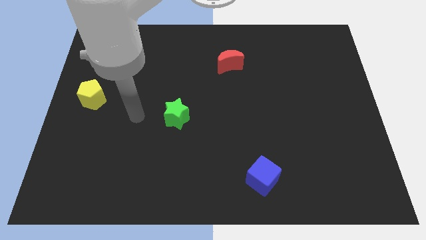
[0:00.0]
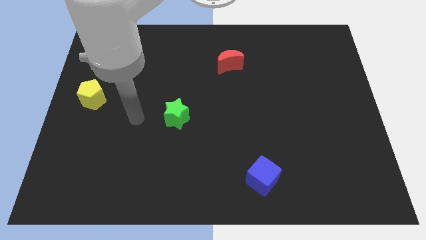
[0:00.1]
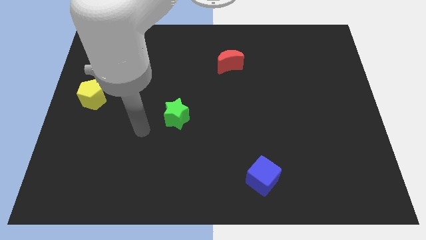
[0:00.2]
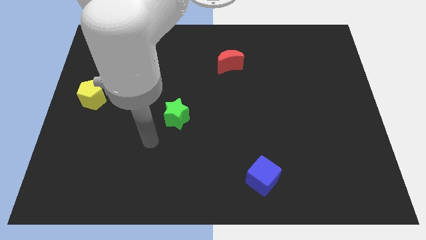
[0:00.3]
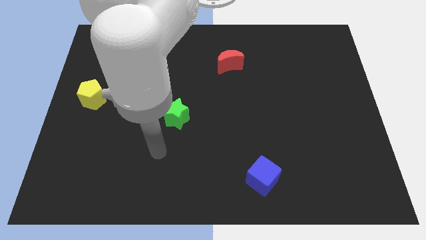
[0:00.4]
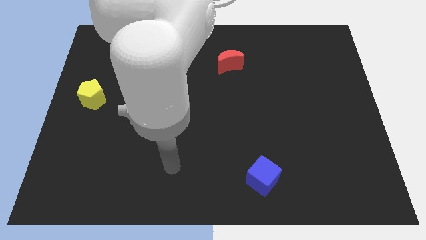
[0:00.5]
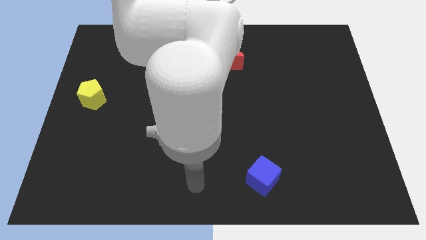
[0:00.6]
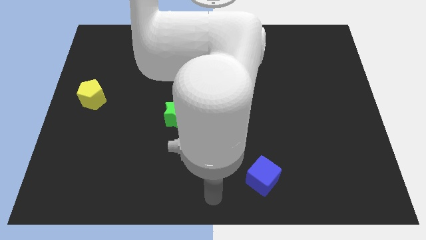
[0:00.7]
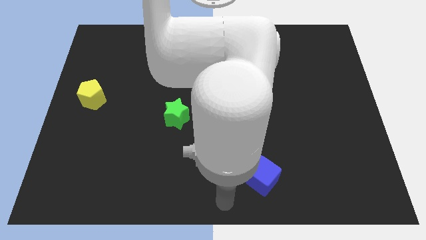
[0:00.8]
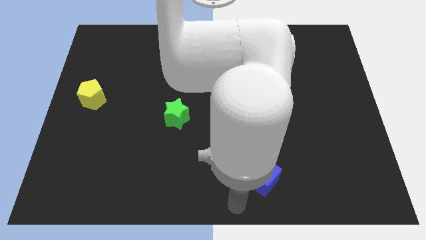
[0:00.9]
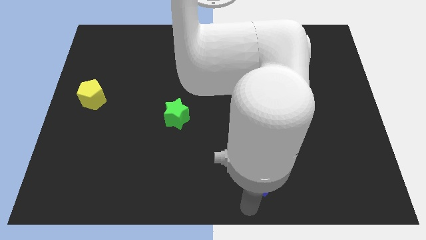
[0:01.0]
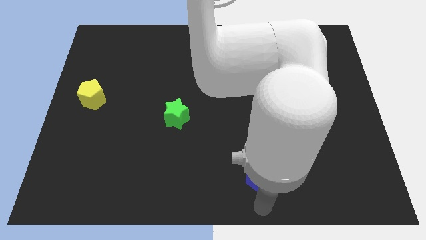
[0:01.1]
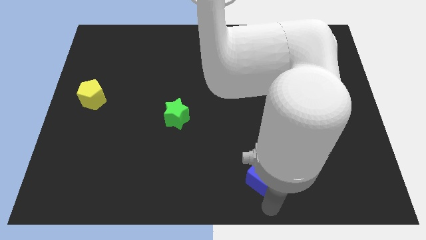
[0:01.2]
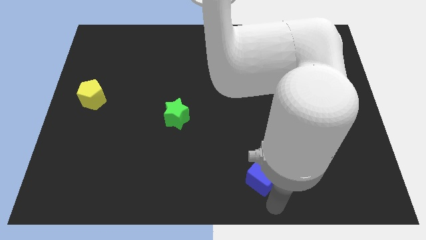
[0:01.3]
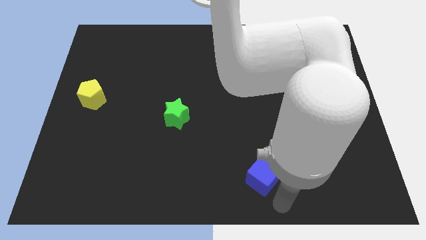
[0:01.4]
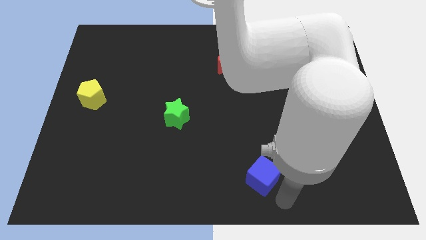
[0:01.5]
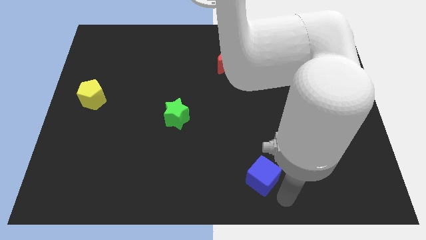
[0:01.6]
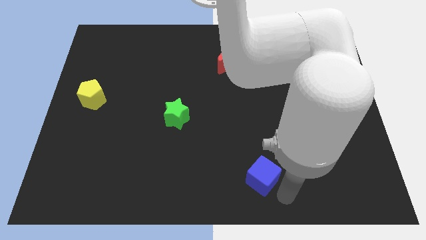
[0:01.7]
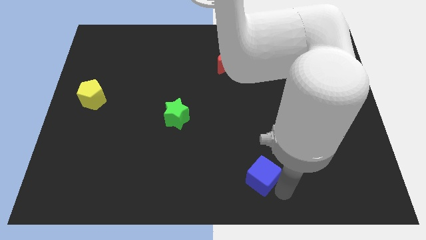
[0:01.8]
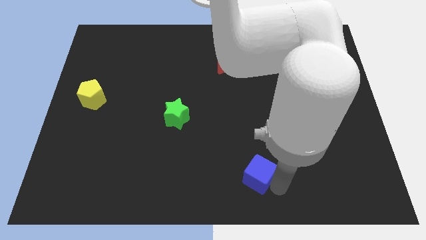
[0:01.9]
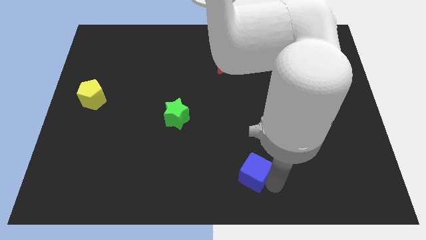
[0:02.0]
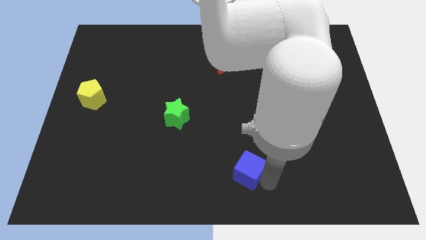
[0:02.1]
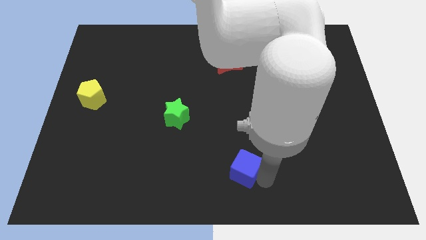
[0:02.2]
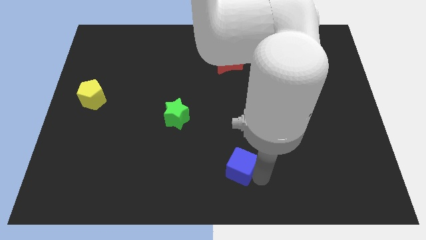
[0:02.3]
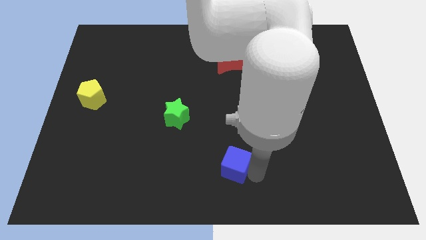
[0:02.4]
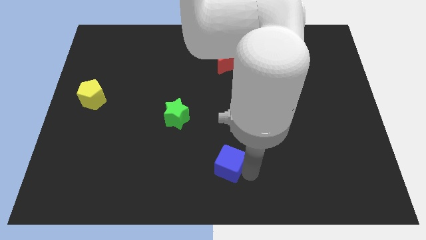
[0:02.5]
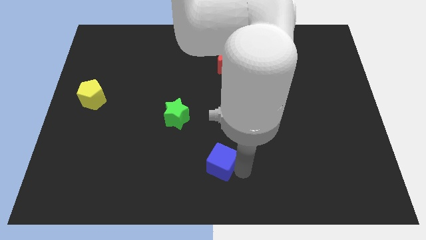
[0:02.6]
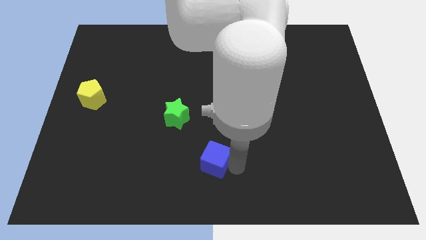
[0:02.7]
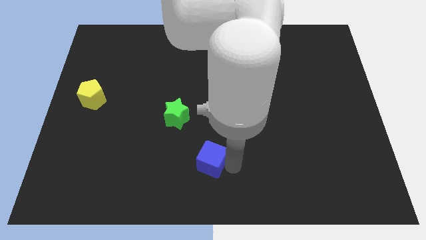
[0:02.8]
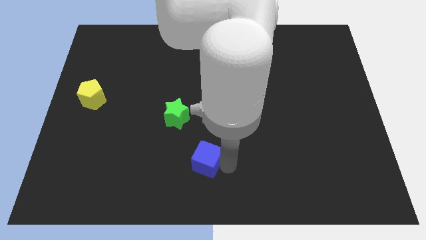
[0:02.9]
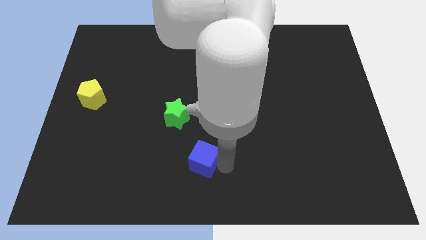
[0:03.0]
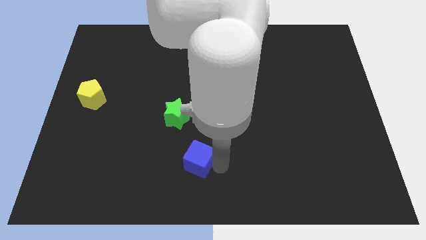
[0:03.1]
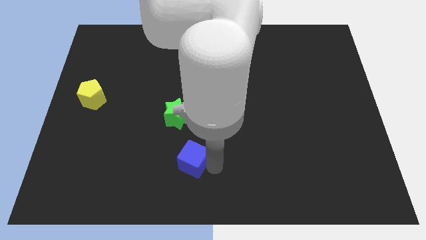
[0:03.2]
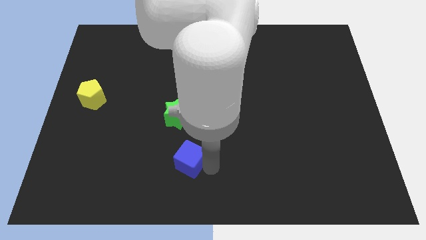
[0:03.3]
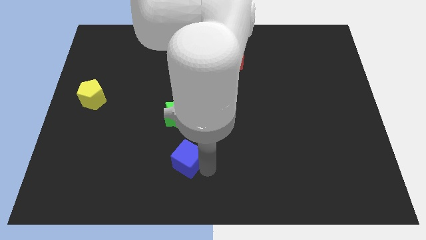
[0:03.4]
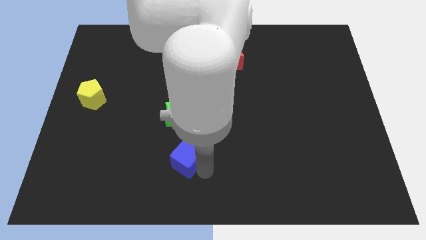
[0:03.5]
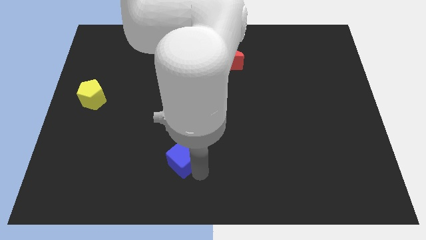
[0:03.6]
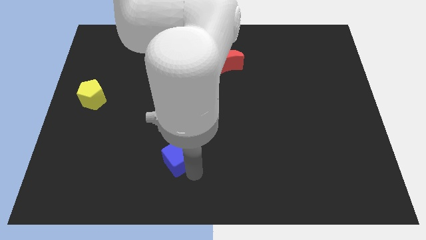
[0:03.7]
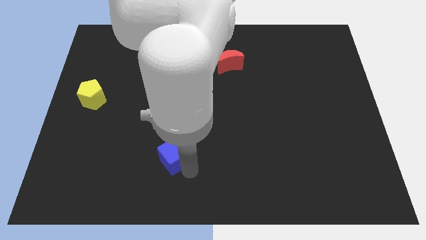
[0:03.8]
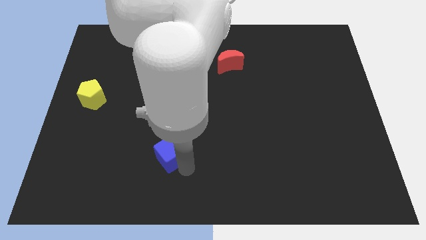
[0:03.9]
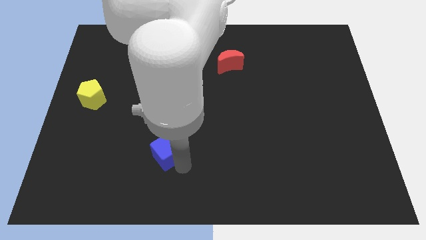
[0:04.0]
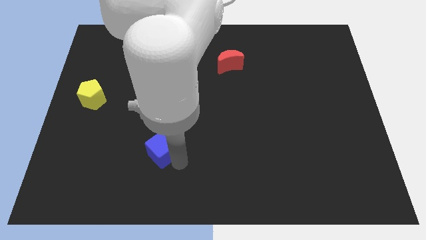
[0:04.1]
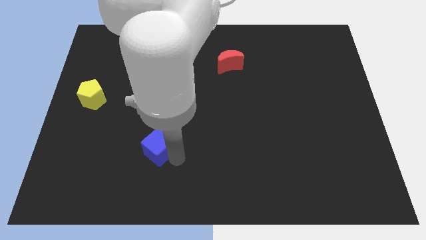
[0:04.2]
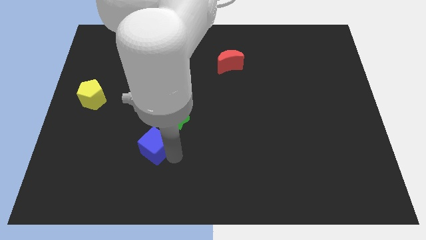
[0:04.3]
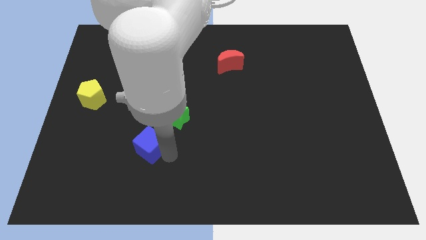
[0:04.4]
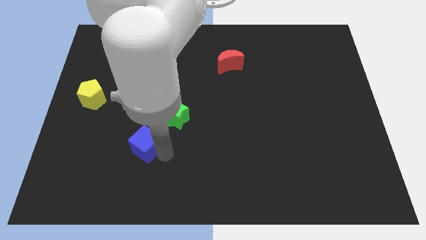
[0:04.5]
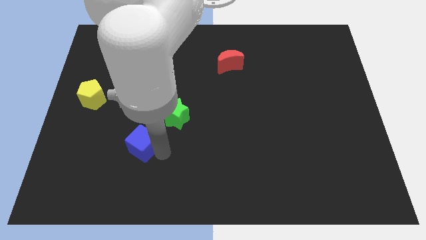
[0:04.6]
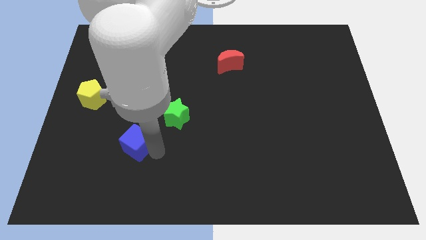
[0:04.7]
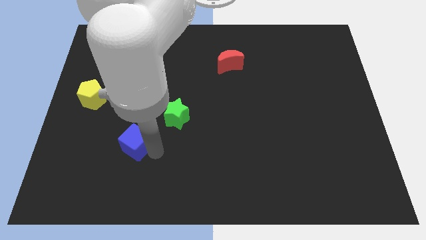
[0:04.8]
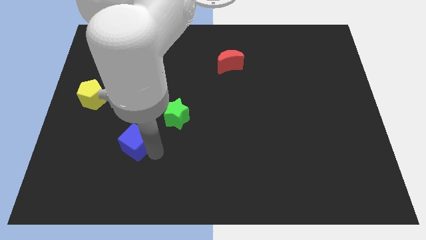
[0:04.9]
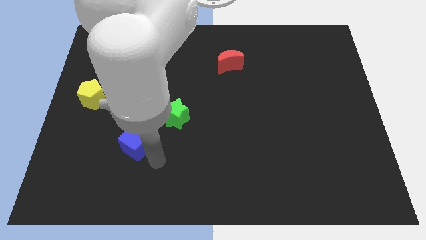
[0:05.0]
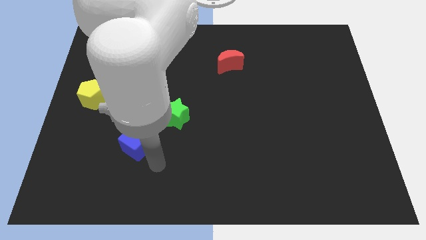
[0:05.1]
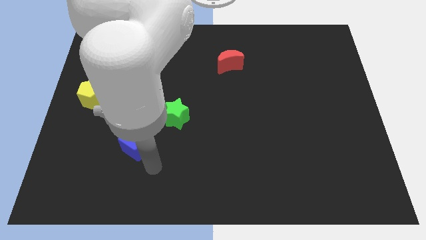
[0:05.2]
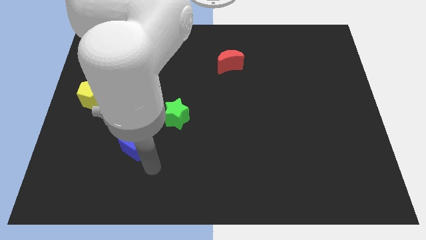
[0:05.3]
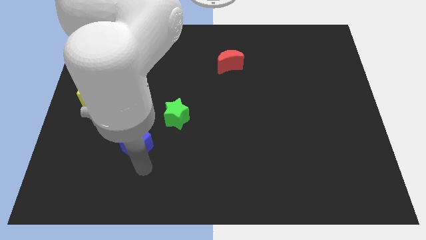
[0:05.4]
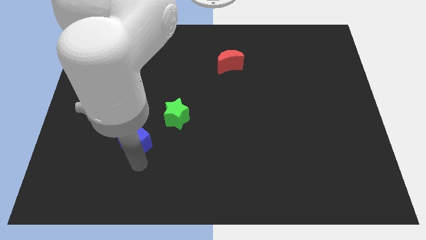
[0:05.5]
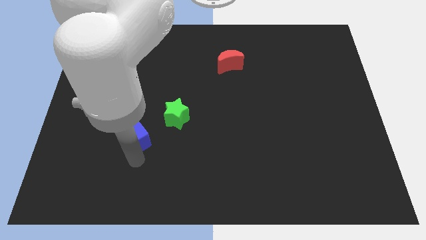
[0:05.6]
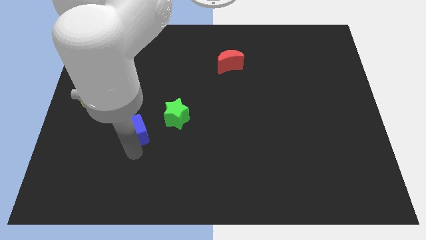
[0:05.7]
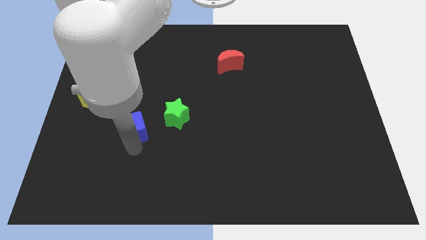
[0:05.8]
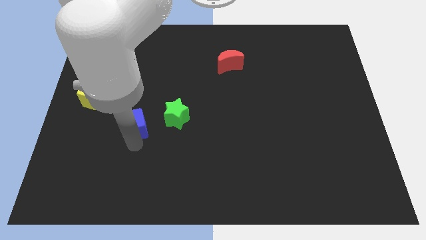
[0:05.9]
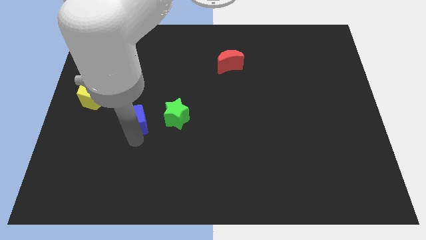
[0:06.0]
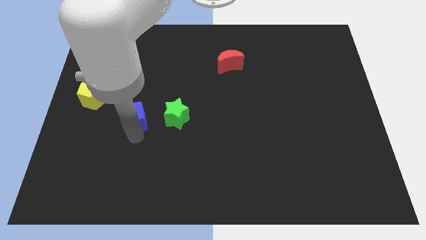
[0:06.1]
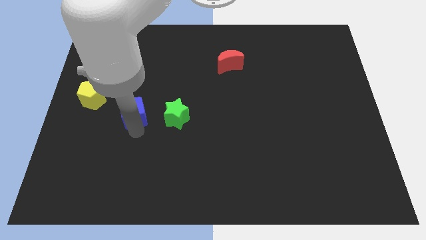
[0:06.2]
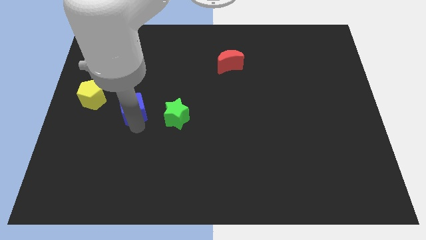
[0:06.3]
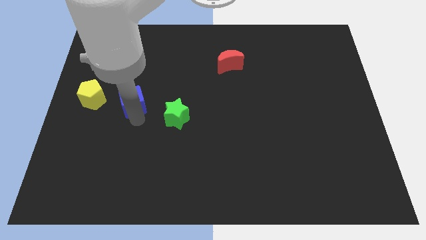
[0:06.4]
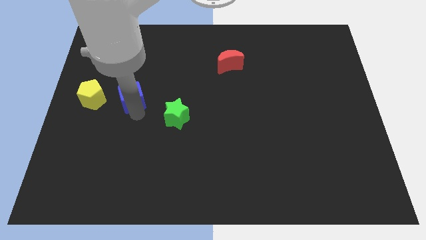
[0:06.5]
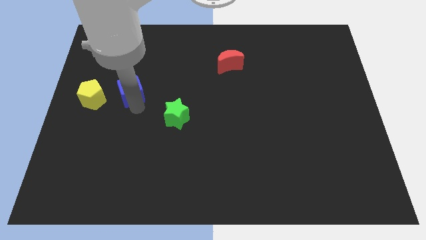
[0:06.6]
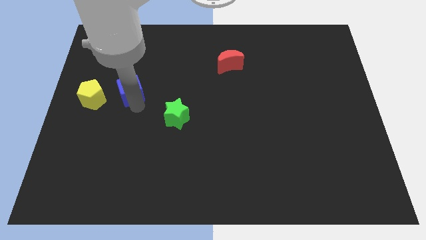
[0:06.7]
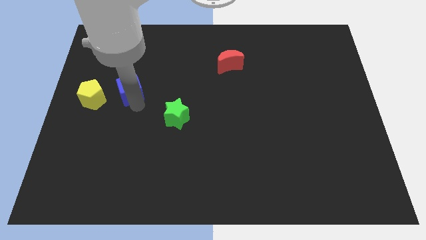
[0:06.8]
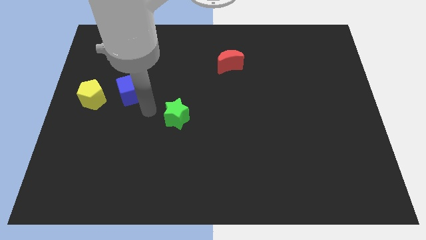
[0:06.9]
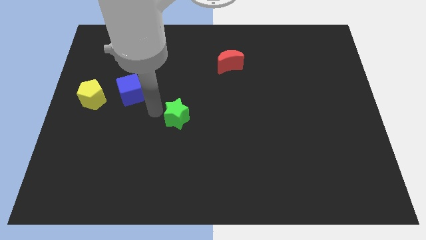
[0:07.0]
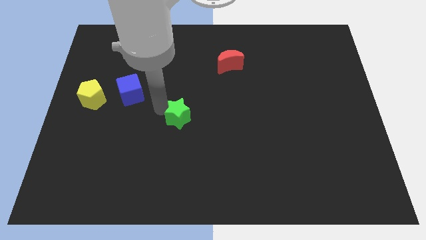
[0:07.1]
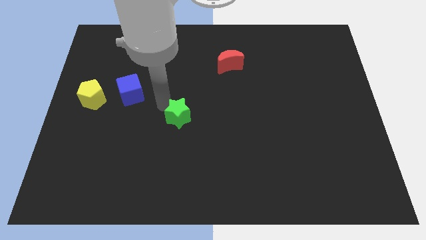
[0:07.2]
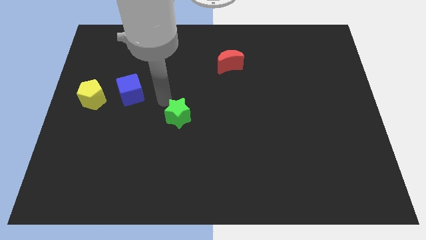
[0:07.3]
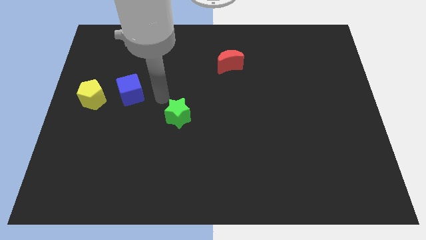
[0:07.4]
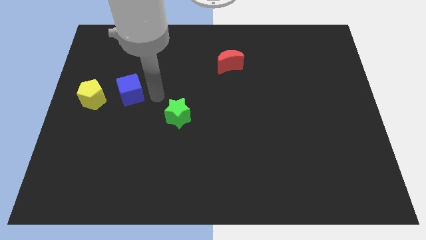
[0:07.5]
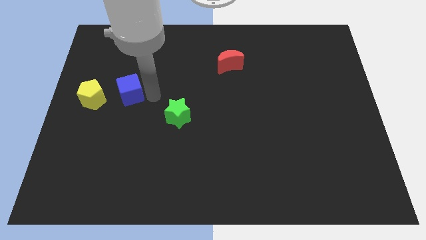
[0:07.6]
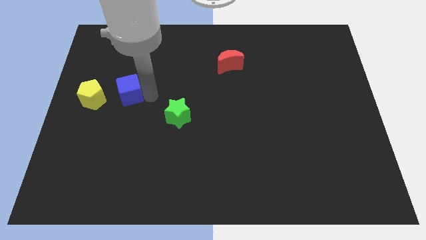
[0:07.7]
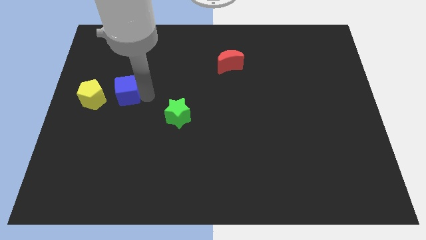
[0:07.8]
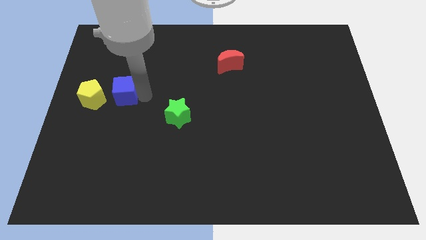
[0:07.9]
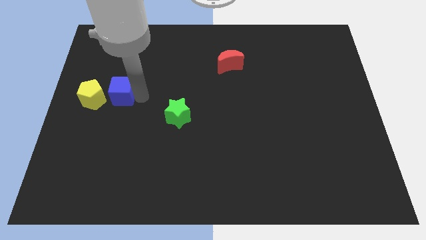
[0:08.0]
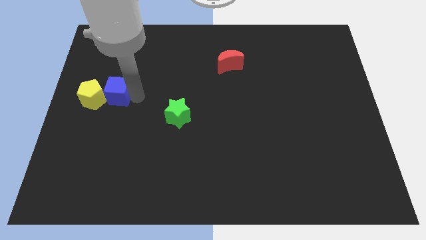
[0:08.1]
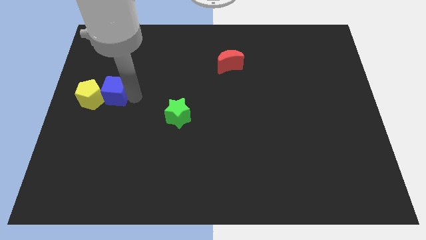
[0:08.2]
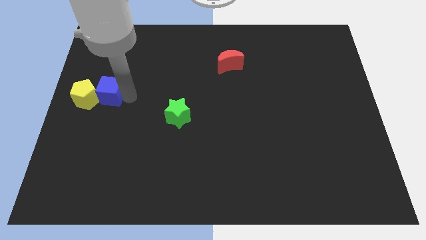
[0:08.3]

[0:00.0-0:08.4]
move the cube towards the pentagon
